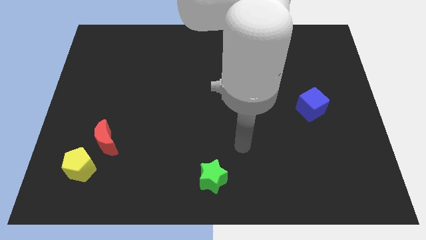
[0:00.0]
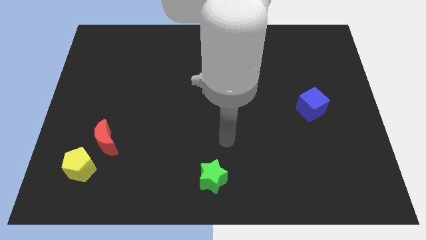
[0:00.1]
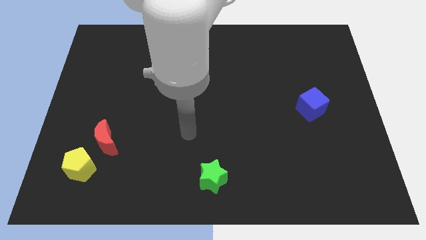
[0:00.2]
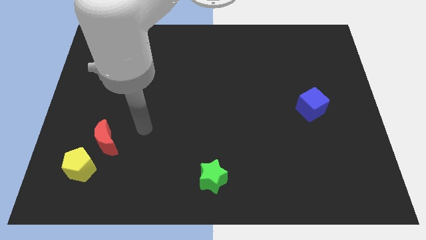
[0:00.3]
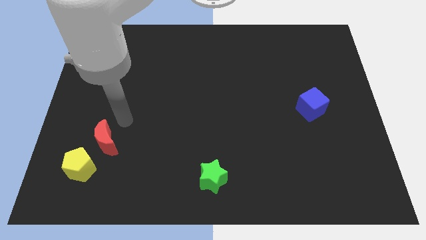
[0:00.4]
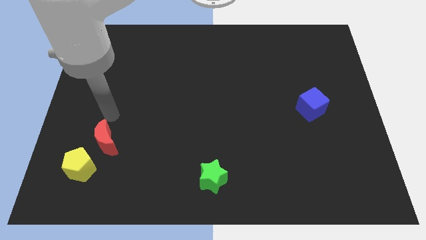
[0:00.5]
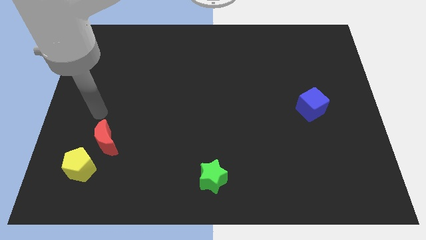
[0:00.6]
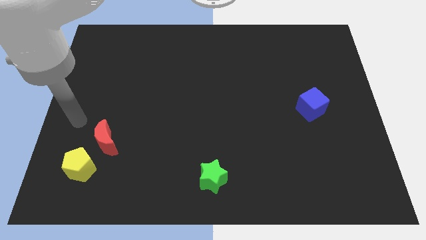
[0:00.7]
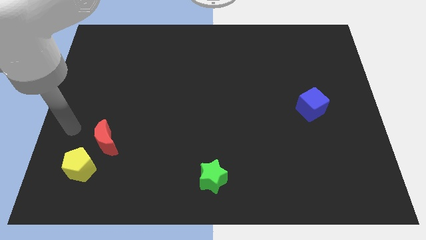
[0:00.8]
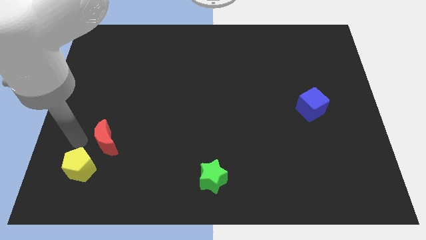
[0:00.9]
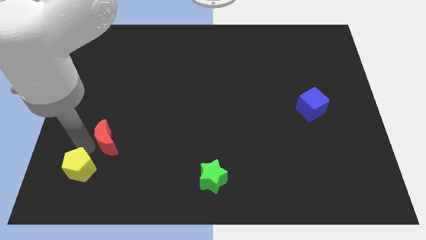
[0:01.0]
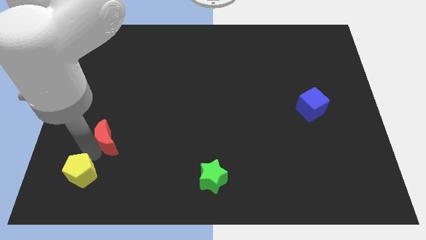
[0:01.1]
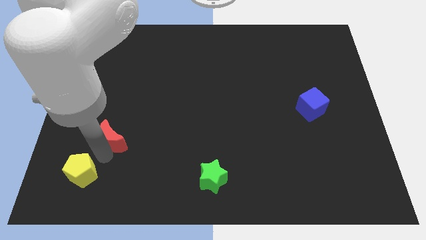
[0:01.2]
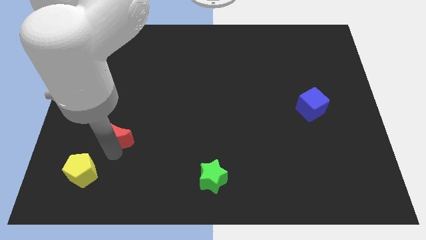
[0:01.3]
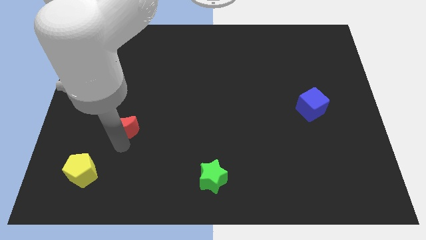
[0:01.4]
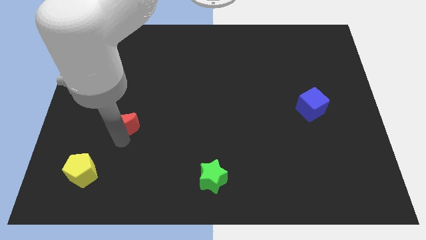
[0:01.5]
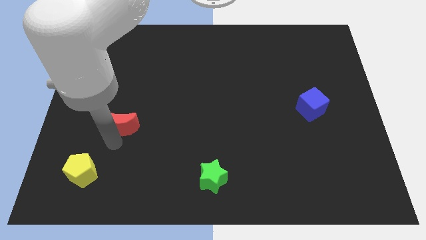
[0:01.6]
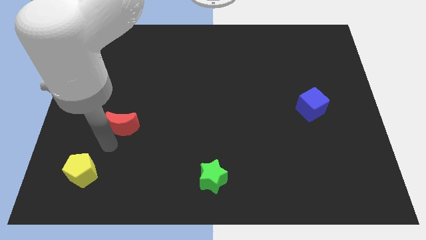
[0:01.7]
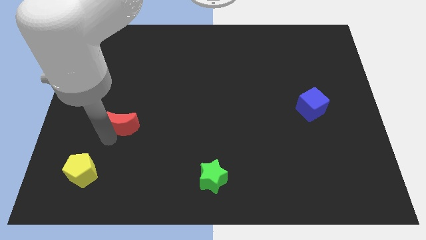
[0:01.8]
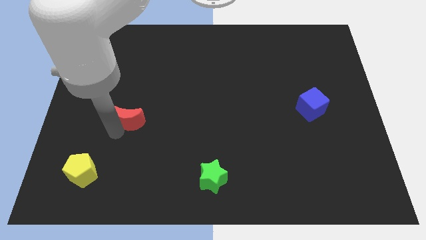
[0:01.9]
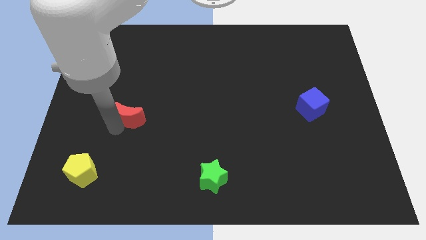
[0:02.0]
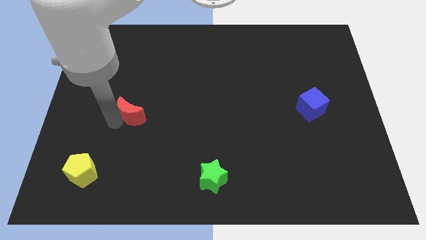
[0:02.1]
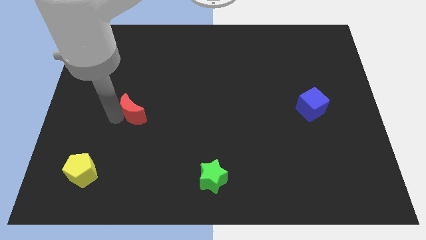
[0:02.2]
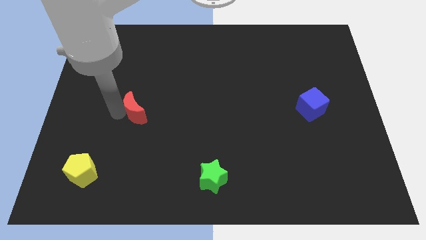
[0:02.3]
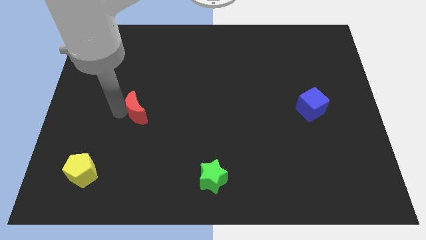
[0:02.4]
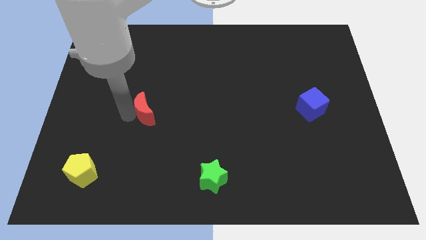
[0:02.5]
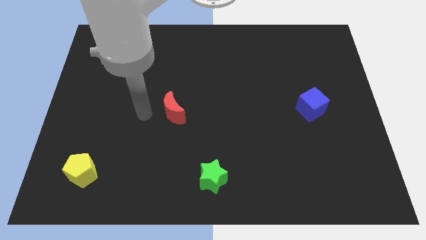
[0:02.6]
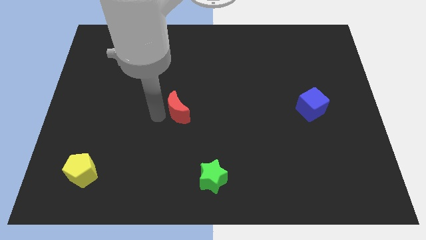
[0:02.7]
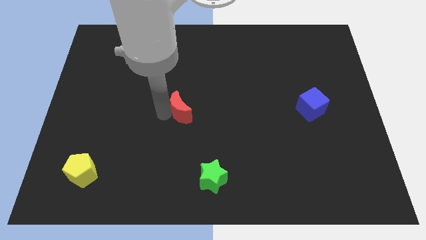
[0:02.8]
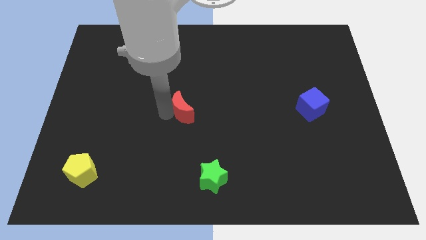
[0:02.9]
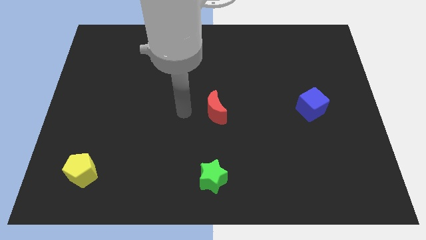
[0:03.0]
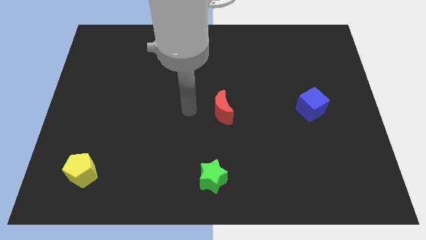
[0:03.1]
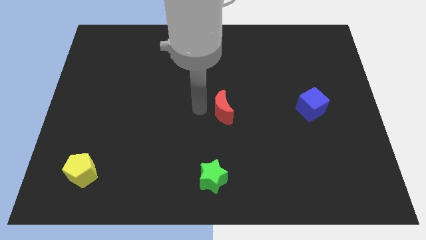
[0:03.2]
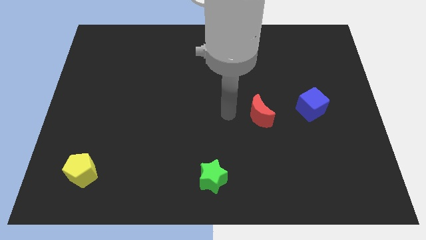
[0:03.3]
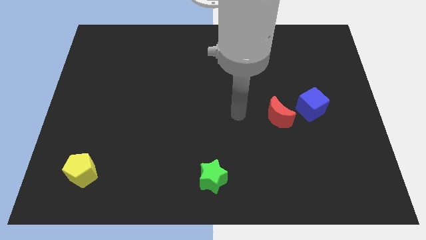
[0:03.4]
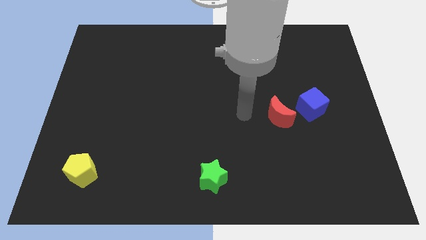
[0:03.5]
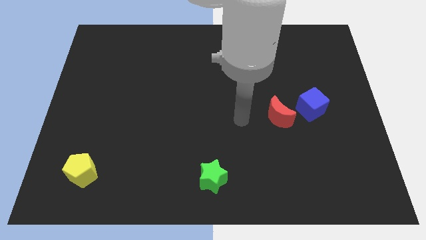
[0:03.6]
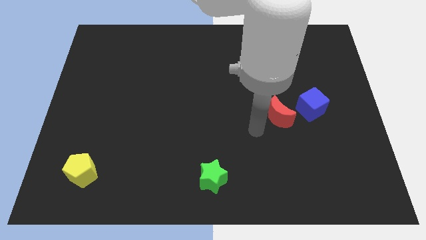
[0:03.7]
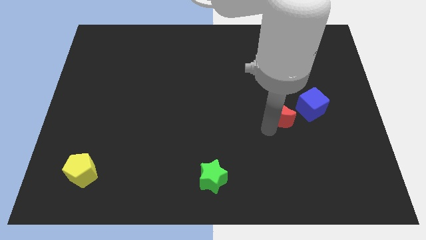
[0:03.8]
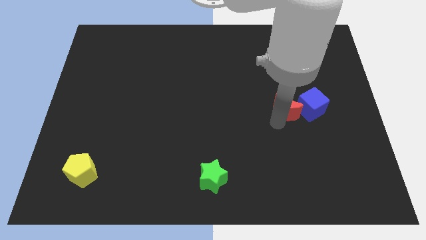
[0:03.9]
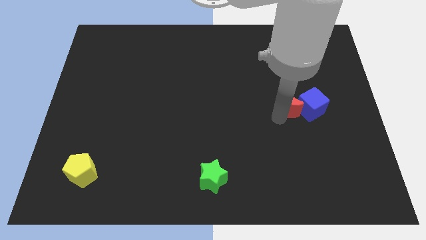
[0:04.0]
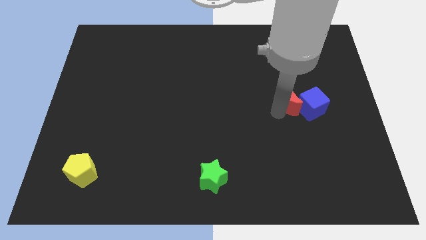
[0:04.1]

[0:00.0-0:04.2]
move the moon to the blue cube

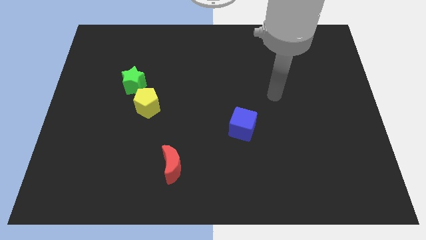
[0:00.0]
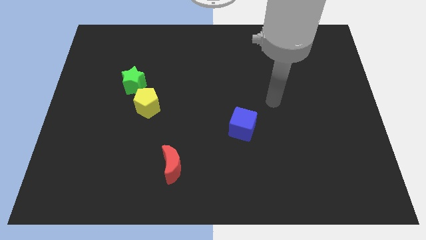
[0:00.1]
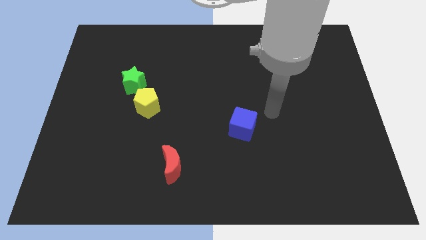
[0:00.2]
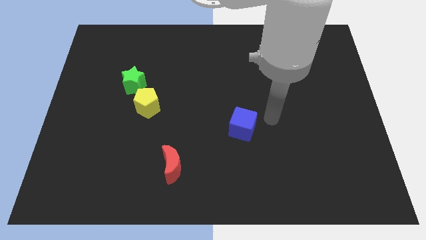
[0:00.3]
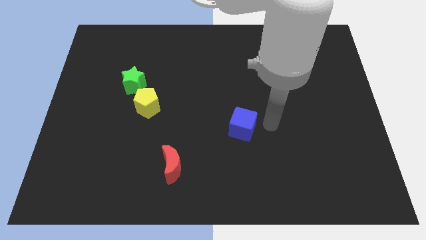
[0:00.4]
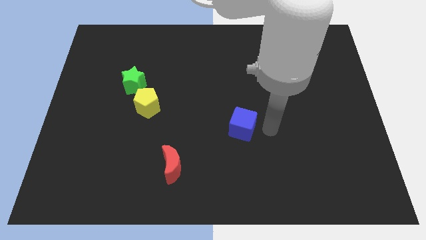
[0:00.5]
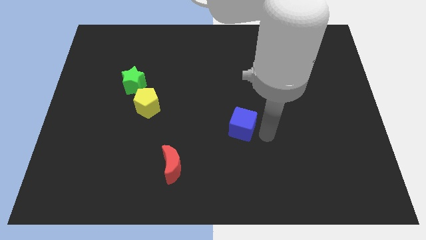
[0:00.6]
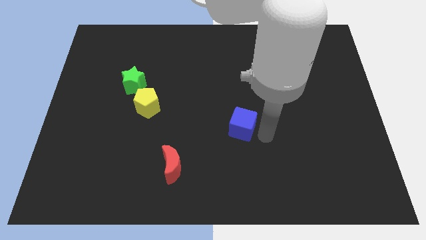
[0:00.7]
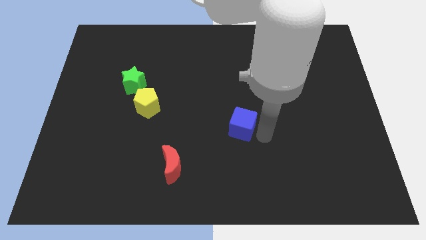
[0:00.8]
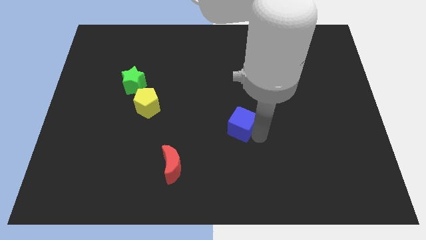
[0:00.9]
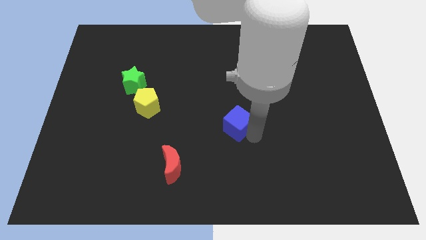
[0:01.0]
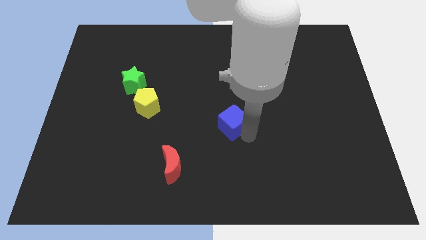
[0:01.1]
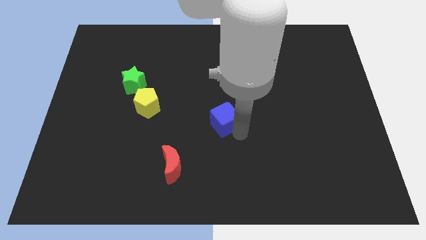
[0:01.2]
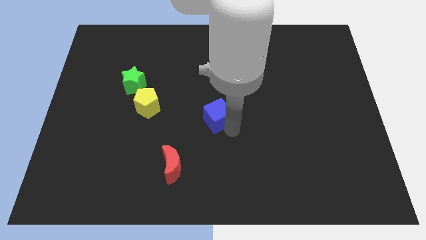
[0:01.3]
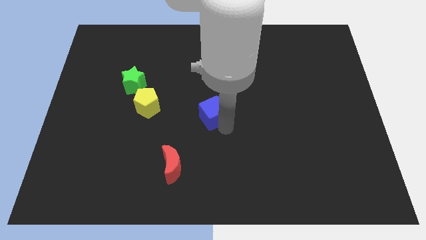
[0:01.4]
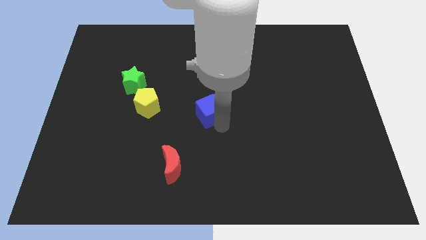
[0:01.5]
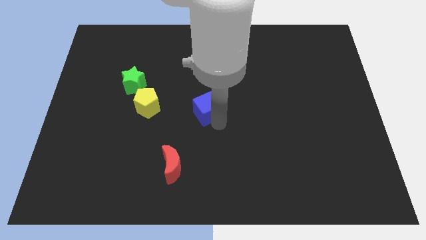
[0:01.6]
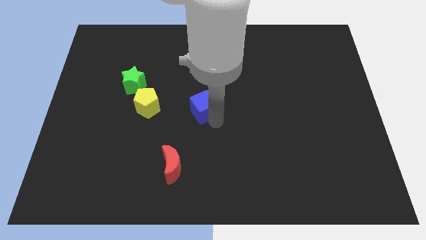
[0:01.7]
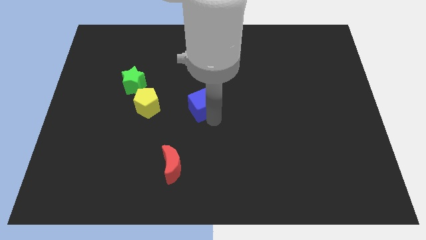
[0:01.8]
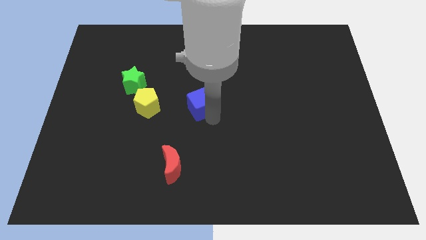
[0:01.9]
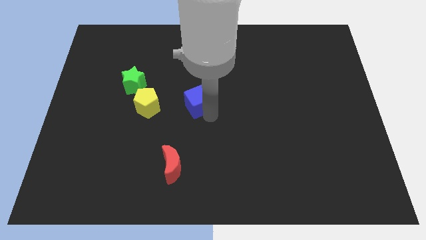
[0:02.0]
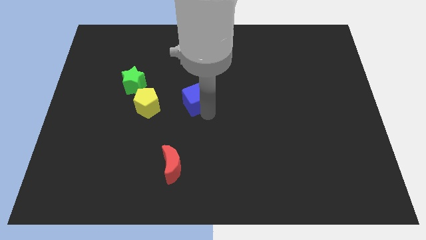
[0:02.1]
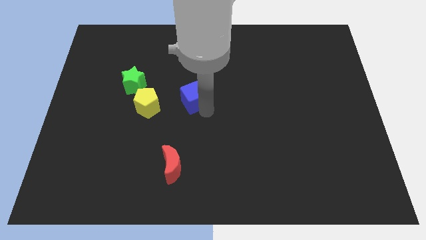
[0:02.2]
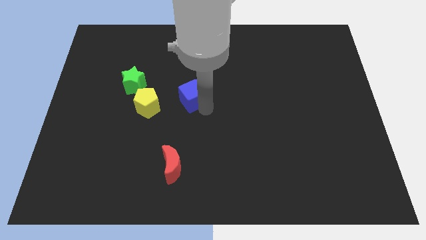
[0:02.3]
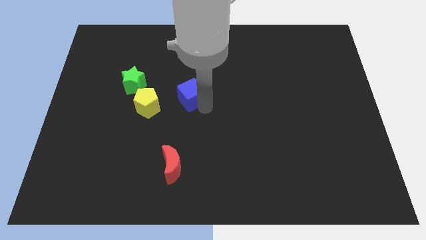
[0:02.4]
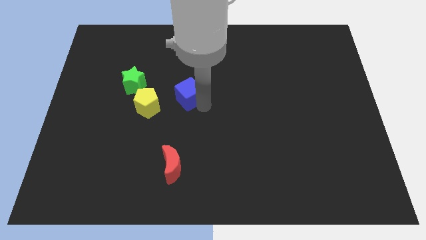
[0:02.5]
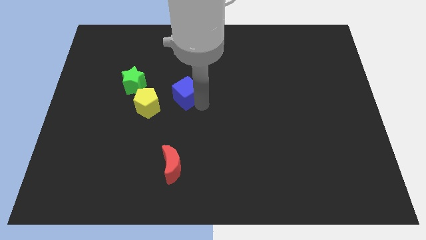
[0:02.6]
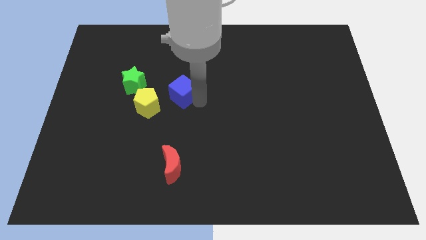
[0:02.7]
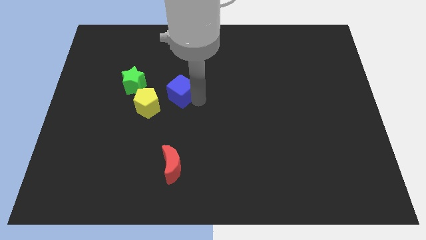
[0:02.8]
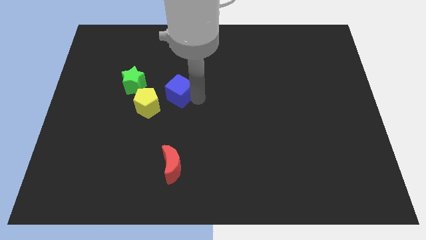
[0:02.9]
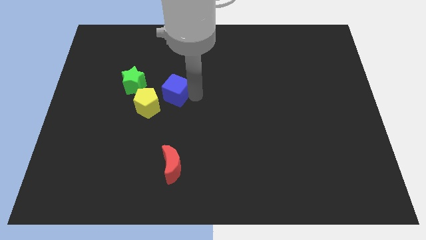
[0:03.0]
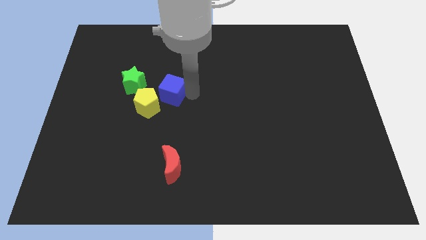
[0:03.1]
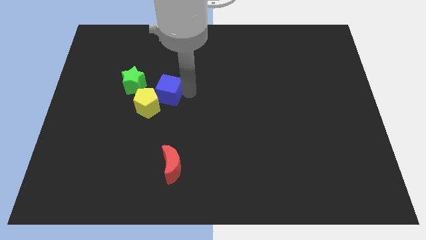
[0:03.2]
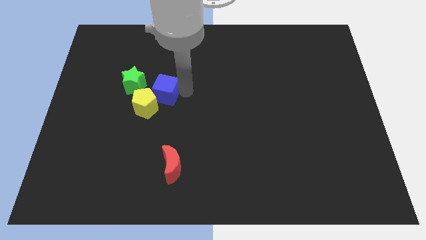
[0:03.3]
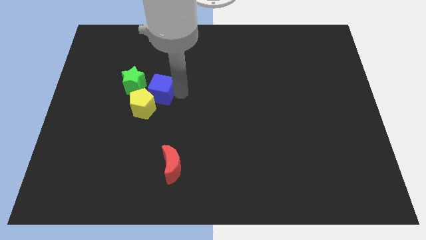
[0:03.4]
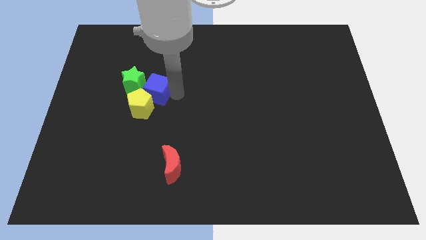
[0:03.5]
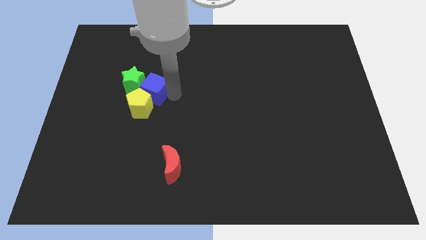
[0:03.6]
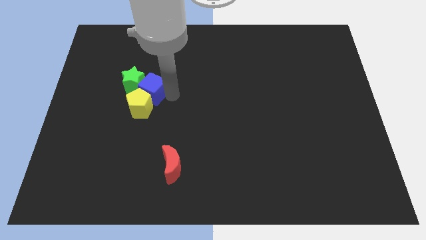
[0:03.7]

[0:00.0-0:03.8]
put the cube close to the green star

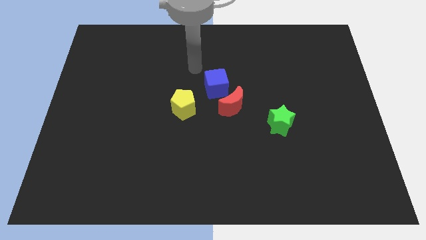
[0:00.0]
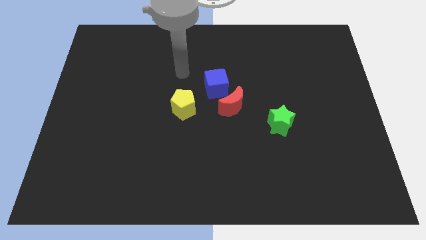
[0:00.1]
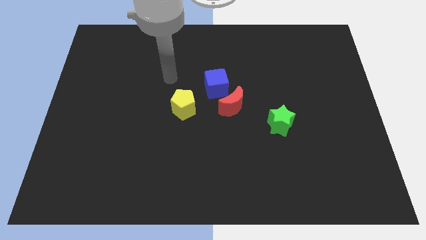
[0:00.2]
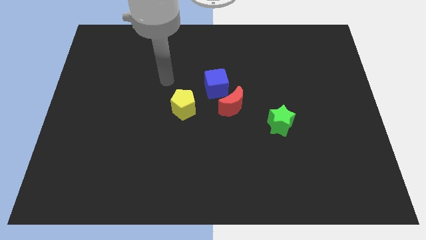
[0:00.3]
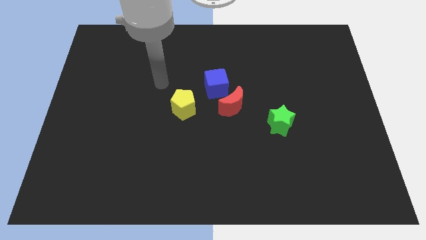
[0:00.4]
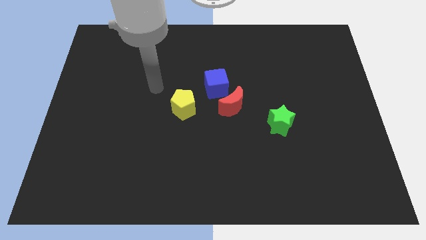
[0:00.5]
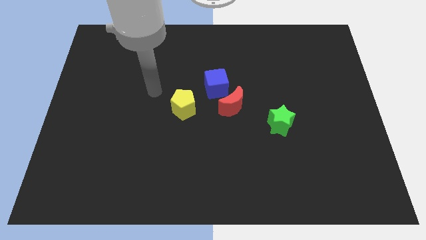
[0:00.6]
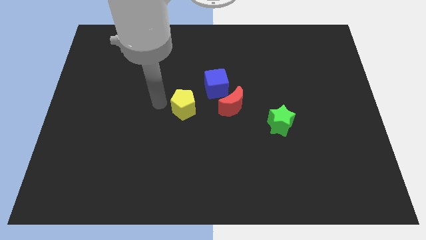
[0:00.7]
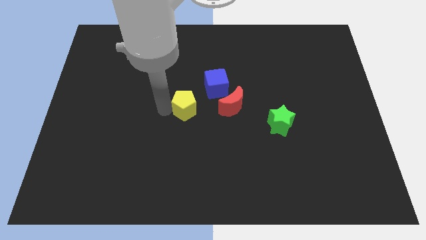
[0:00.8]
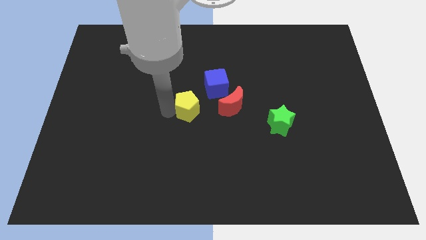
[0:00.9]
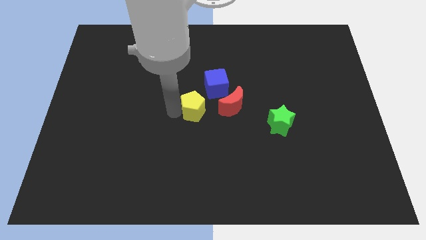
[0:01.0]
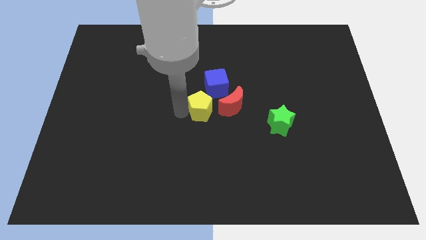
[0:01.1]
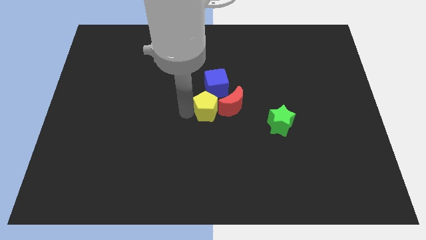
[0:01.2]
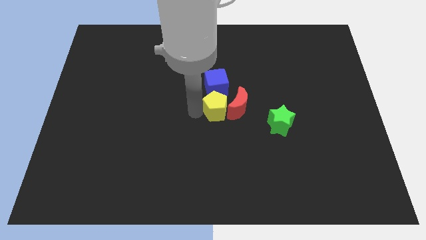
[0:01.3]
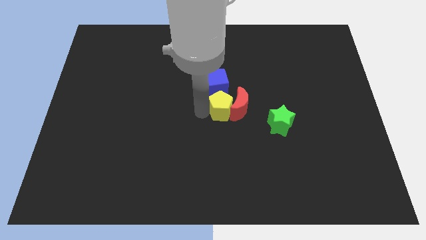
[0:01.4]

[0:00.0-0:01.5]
put the yellow block towards the moon
